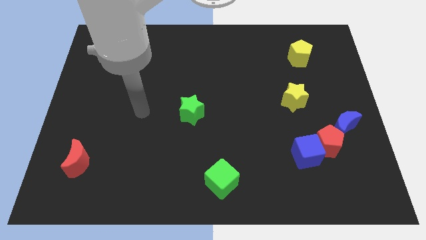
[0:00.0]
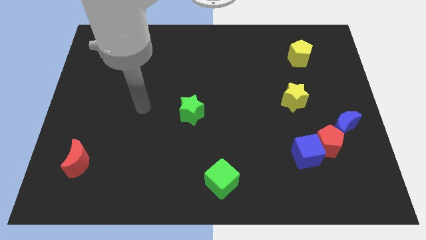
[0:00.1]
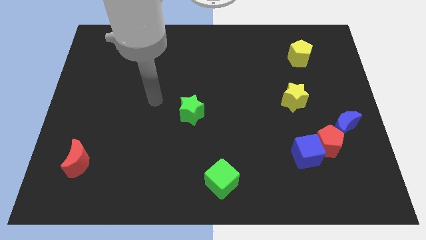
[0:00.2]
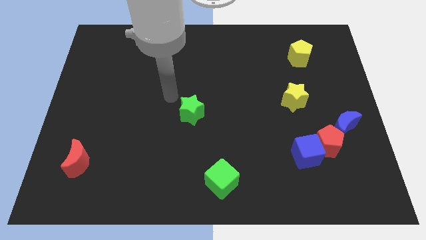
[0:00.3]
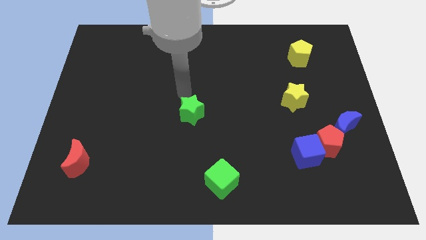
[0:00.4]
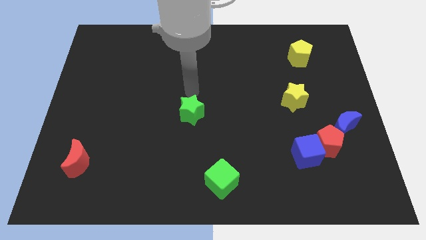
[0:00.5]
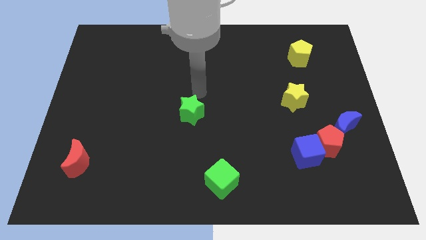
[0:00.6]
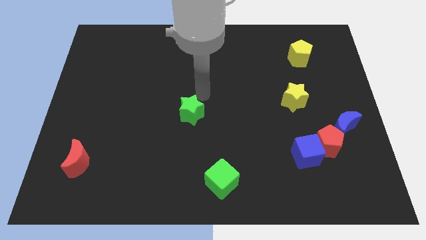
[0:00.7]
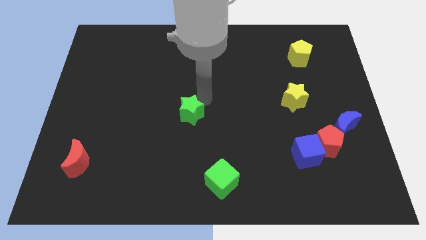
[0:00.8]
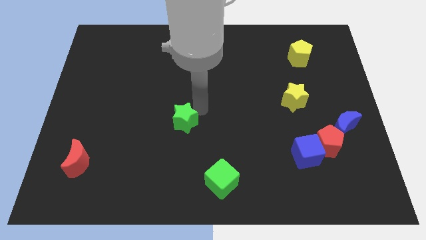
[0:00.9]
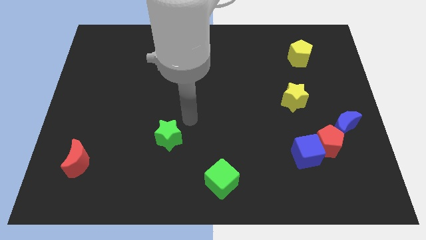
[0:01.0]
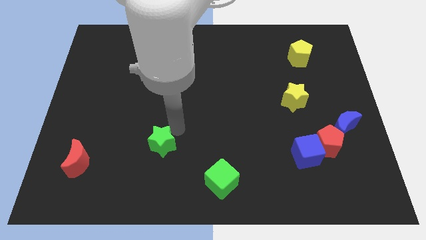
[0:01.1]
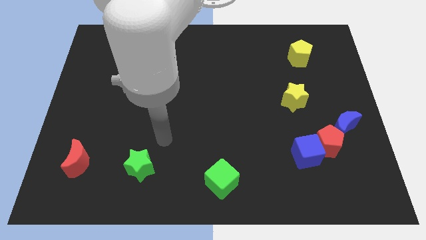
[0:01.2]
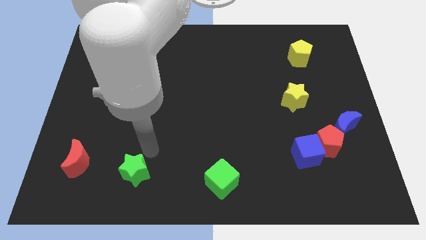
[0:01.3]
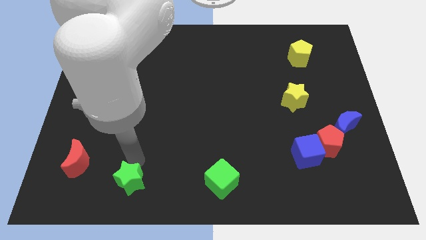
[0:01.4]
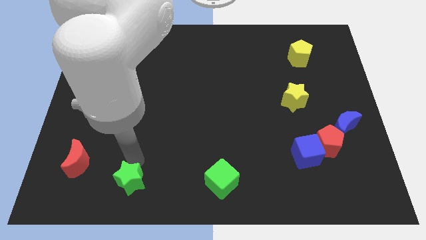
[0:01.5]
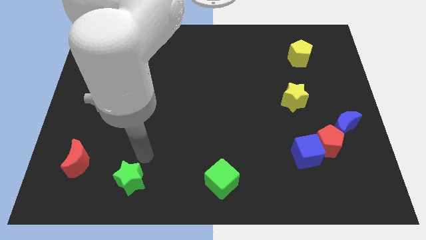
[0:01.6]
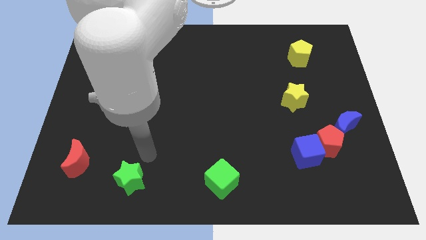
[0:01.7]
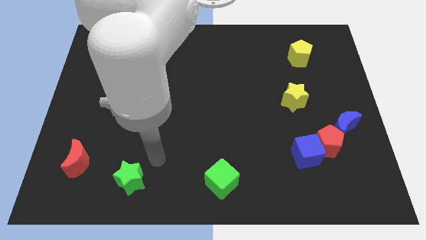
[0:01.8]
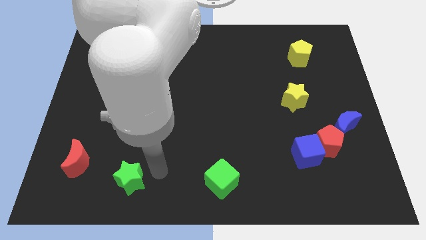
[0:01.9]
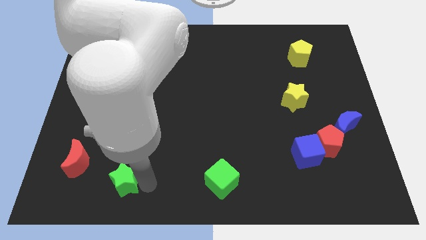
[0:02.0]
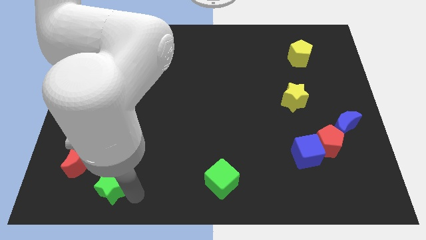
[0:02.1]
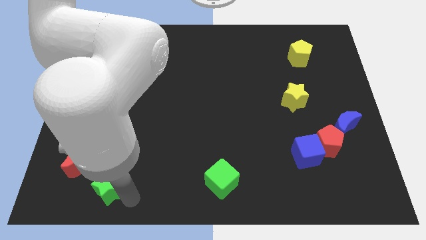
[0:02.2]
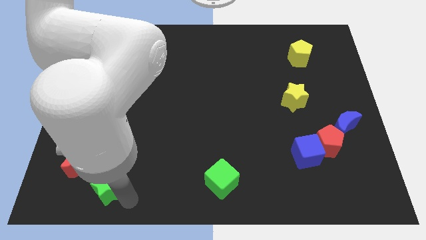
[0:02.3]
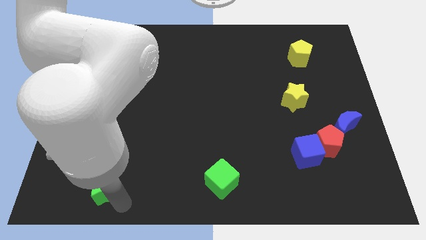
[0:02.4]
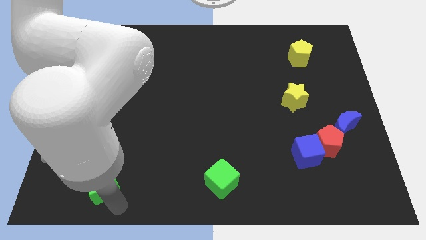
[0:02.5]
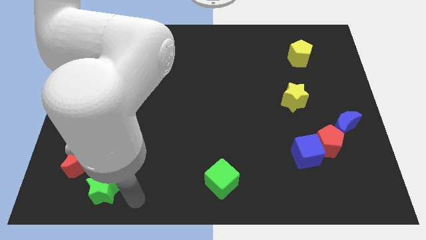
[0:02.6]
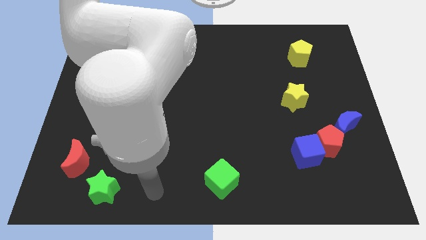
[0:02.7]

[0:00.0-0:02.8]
place the green star left to the green cube

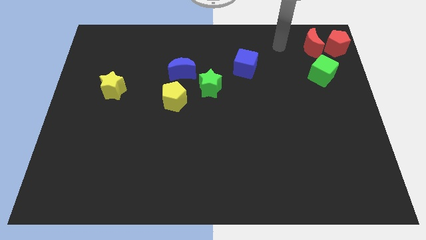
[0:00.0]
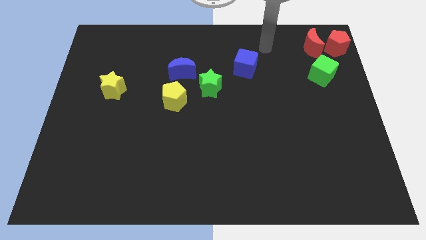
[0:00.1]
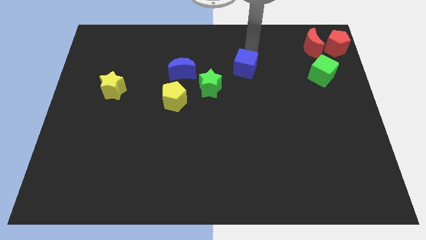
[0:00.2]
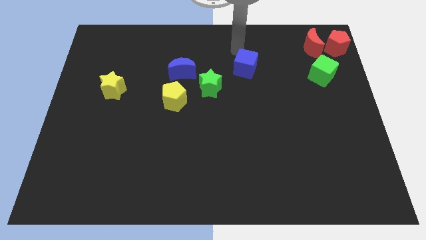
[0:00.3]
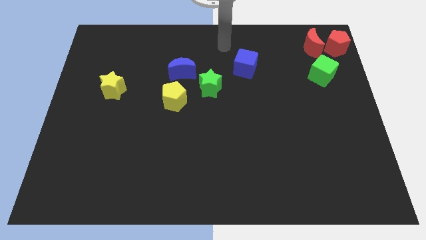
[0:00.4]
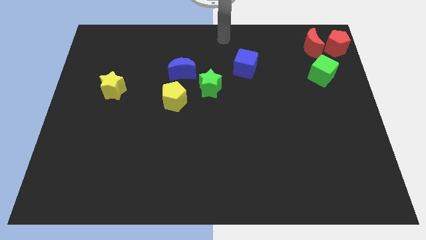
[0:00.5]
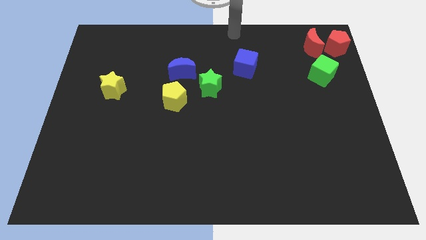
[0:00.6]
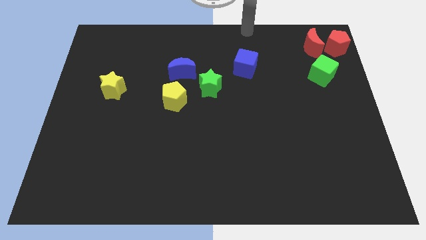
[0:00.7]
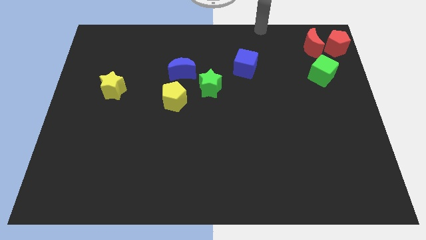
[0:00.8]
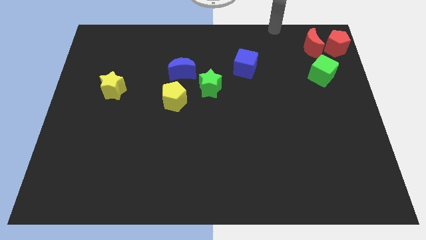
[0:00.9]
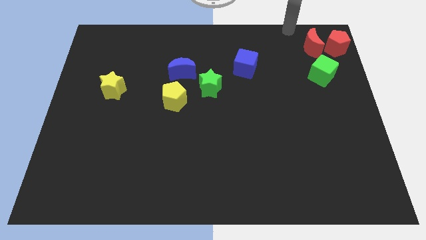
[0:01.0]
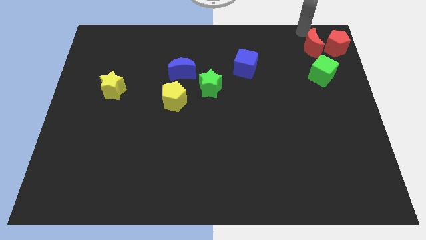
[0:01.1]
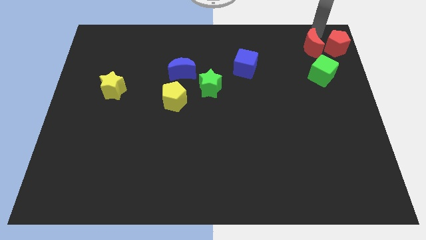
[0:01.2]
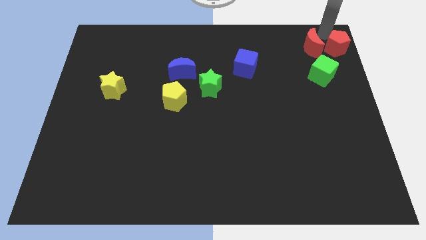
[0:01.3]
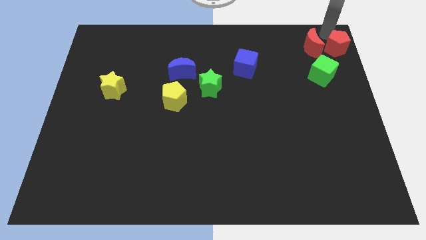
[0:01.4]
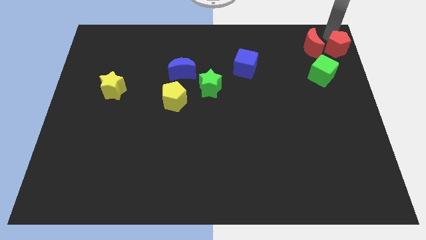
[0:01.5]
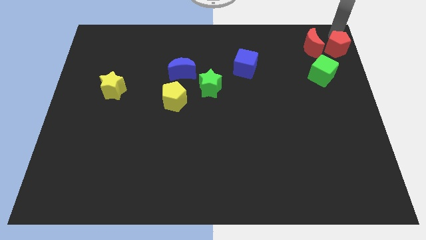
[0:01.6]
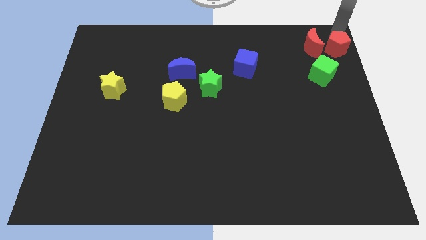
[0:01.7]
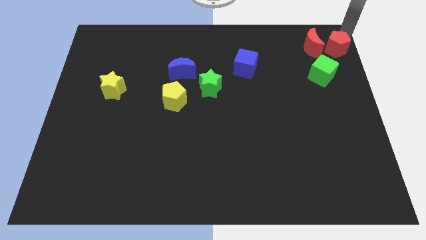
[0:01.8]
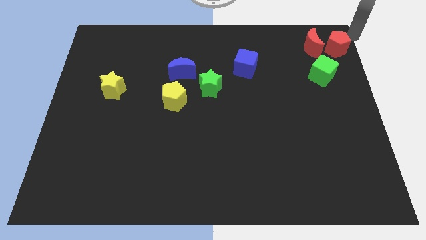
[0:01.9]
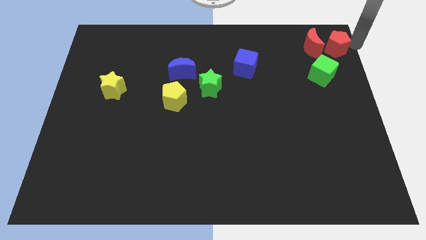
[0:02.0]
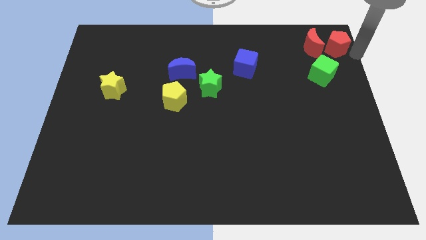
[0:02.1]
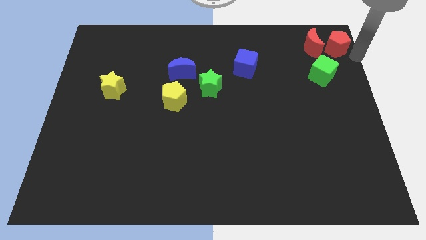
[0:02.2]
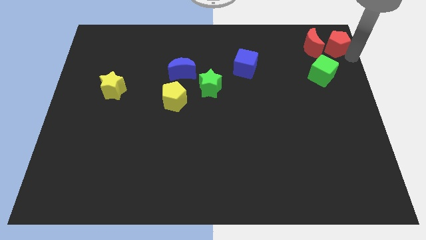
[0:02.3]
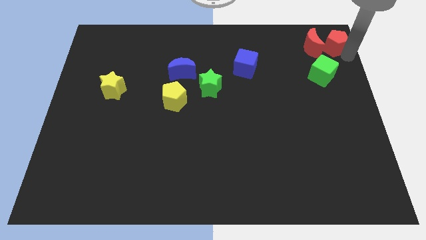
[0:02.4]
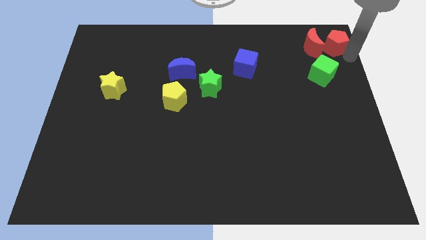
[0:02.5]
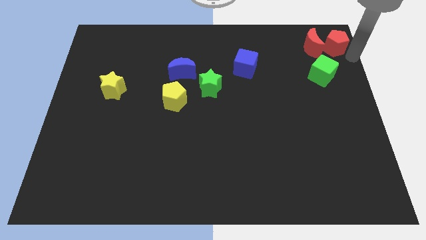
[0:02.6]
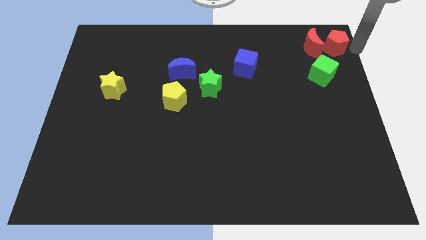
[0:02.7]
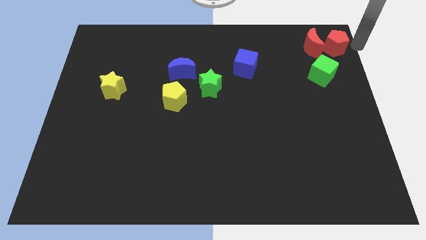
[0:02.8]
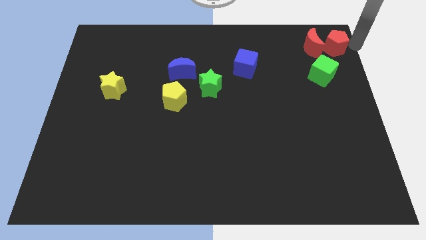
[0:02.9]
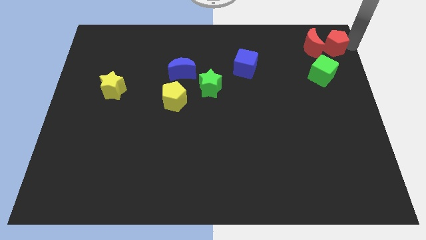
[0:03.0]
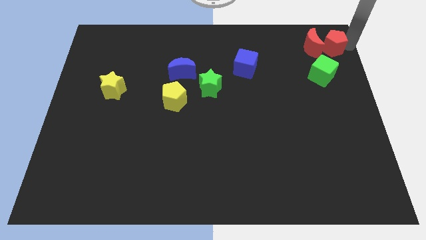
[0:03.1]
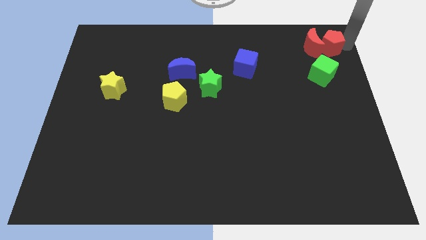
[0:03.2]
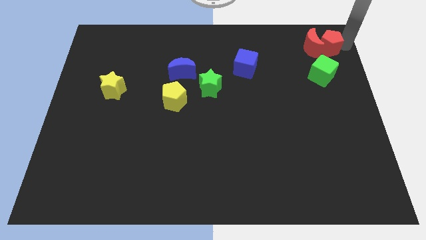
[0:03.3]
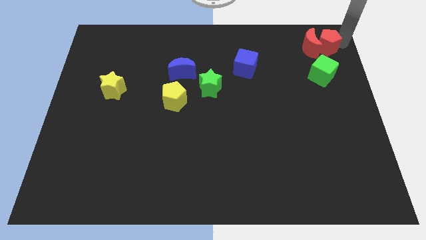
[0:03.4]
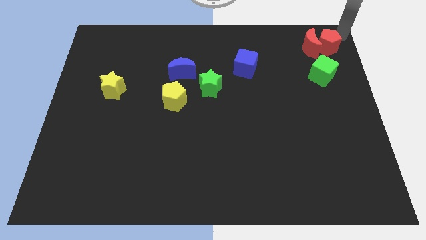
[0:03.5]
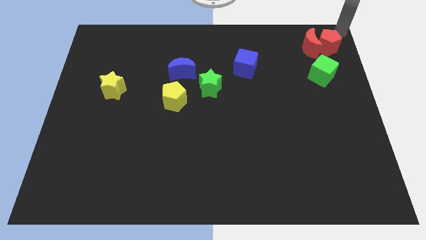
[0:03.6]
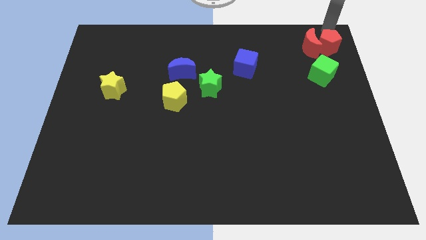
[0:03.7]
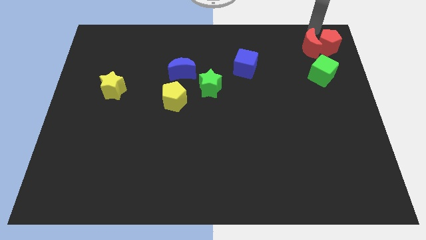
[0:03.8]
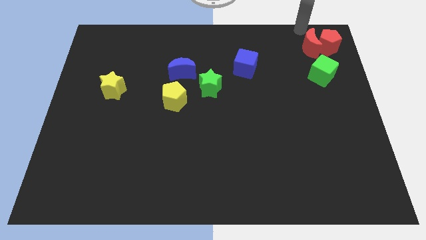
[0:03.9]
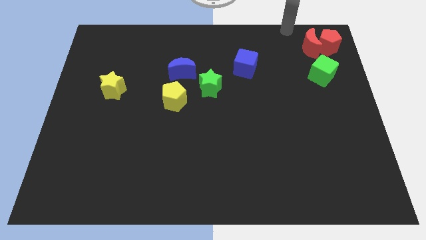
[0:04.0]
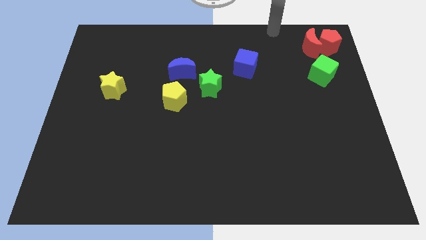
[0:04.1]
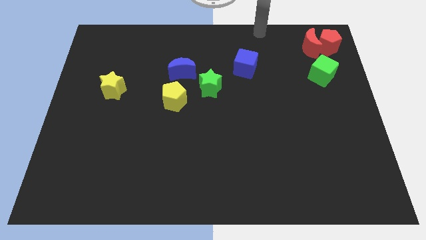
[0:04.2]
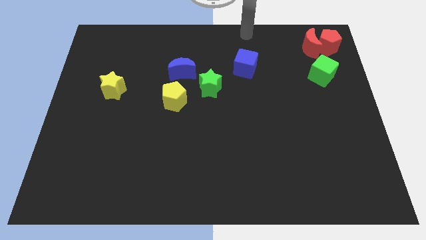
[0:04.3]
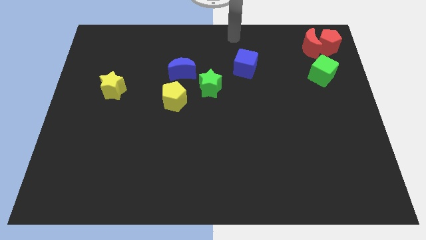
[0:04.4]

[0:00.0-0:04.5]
push the red pentagon into red moon

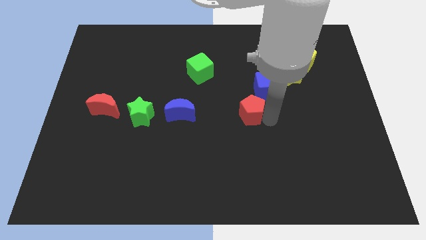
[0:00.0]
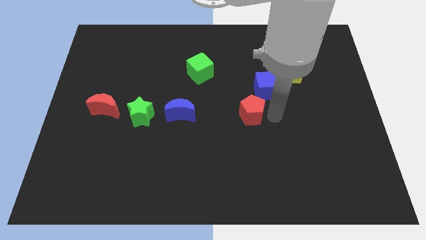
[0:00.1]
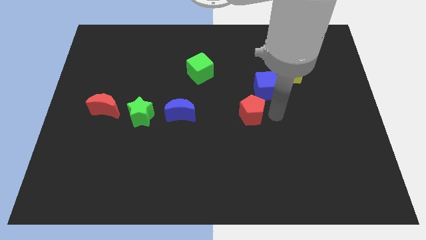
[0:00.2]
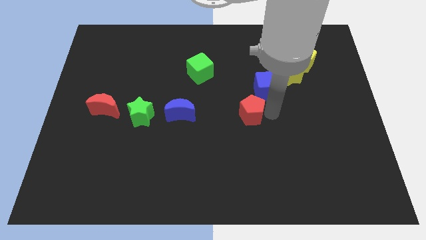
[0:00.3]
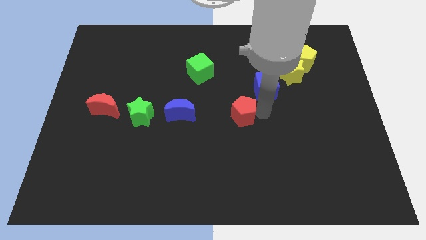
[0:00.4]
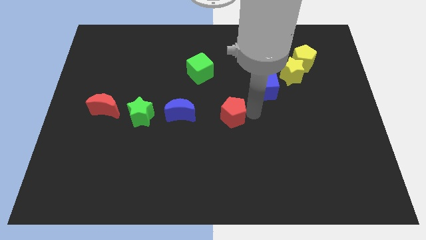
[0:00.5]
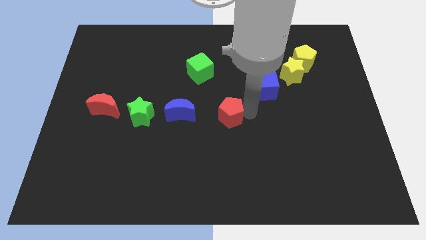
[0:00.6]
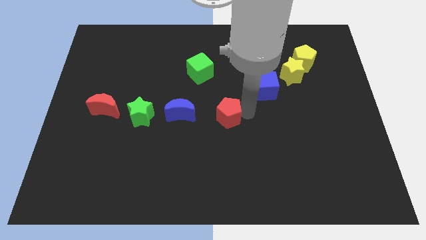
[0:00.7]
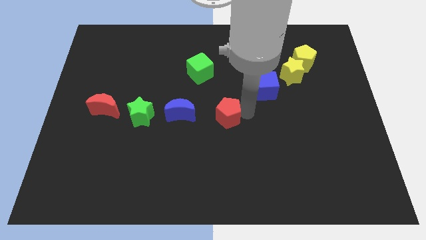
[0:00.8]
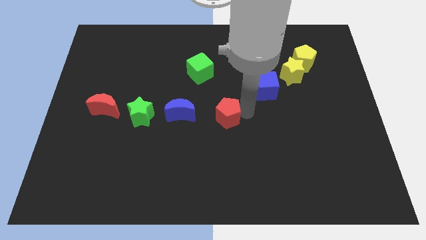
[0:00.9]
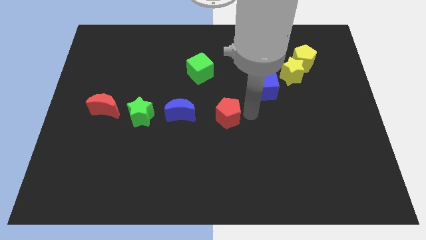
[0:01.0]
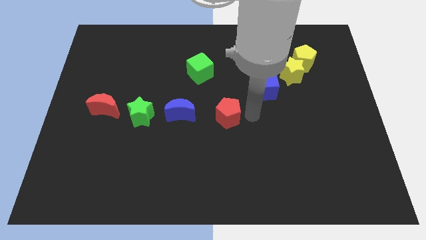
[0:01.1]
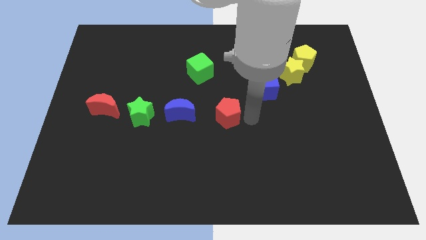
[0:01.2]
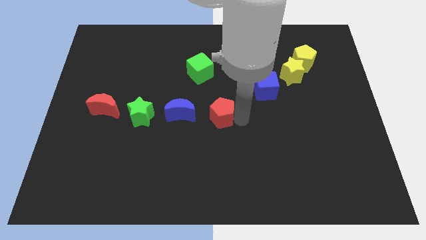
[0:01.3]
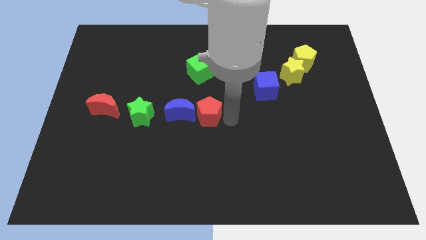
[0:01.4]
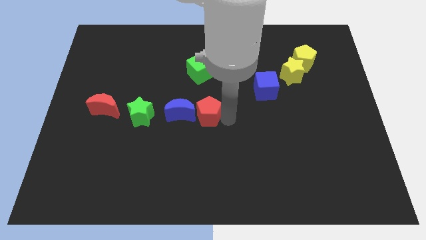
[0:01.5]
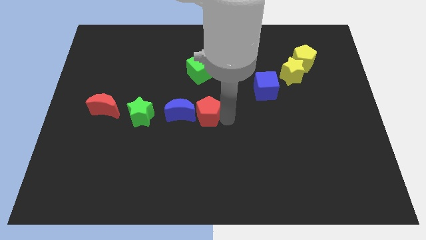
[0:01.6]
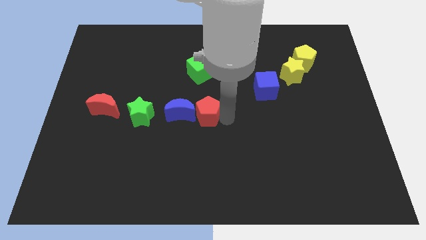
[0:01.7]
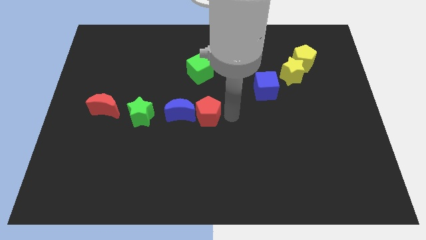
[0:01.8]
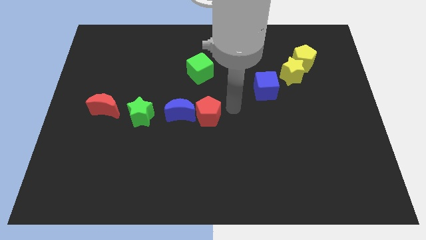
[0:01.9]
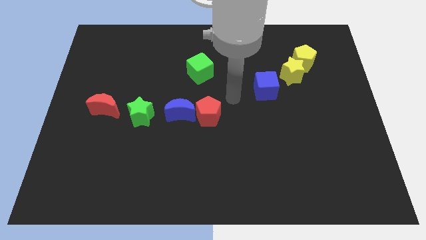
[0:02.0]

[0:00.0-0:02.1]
push red pentagon into blue moon
